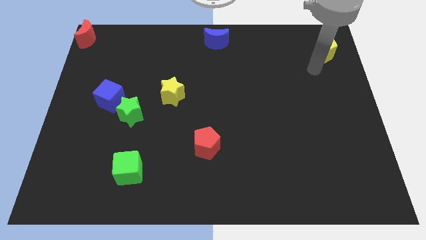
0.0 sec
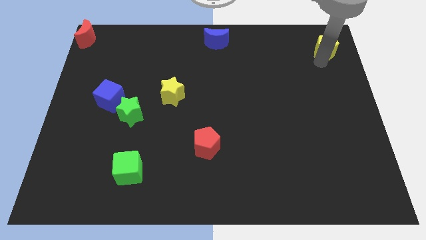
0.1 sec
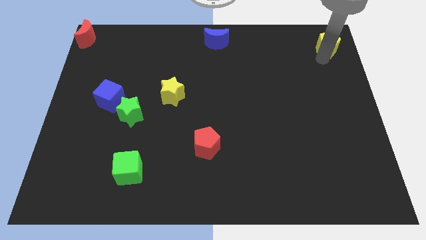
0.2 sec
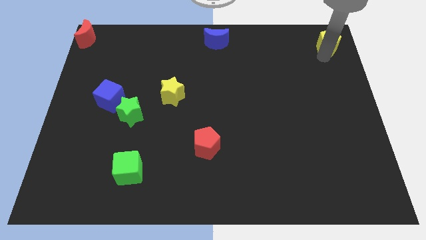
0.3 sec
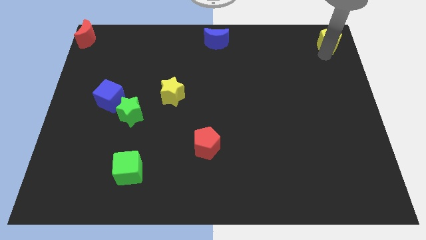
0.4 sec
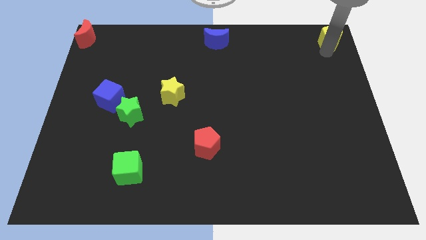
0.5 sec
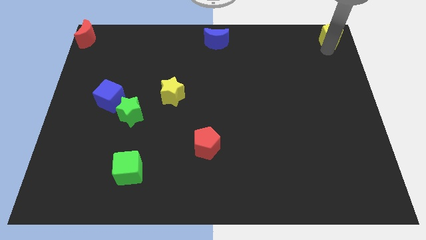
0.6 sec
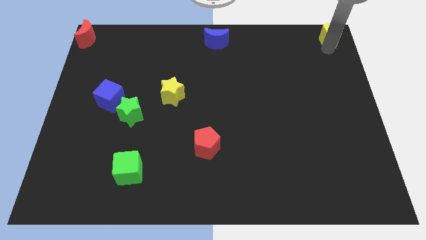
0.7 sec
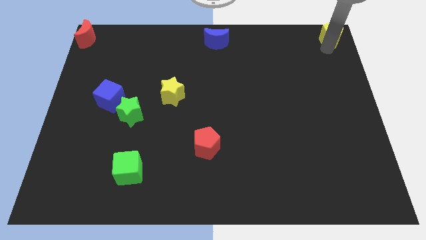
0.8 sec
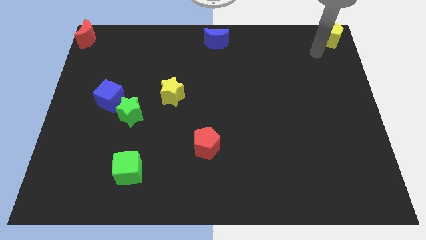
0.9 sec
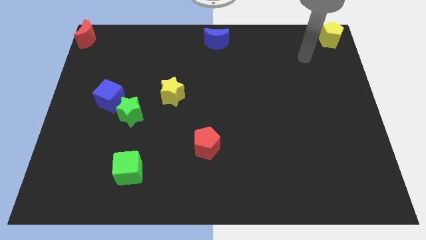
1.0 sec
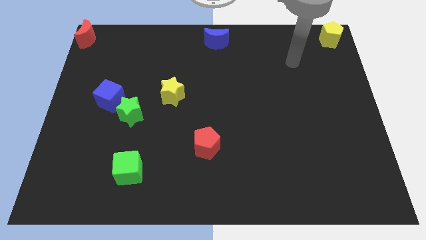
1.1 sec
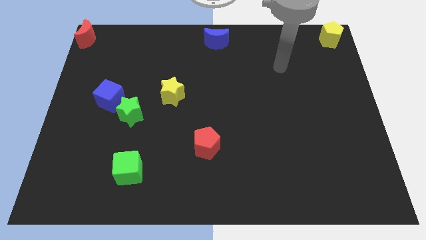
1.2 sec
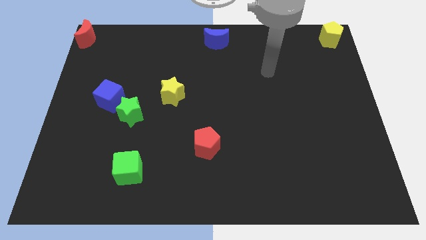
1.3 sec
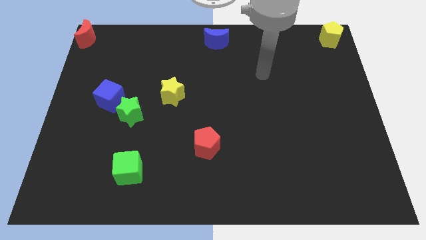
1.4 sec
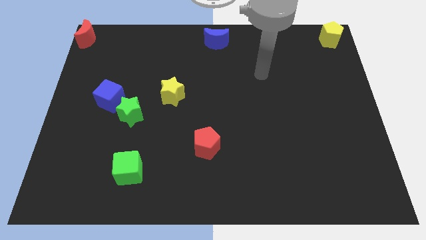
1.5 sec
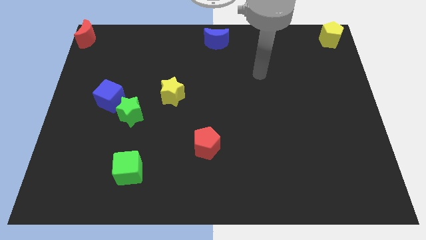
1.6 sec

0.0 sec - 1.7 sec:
push the yellow pentagon to the top right corner of the board

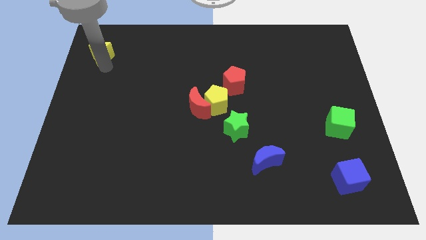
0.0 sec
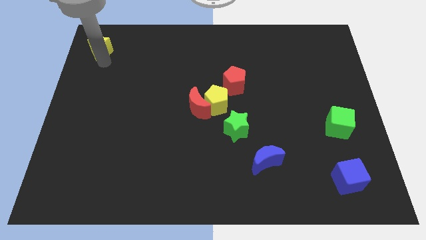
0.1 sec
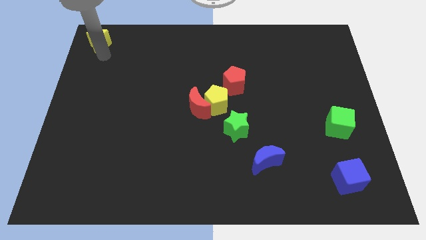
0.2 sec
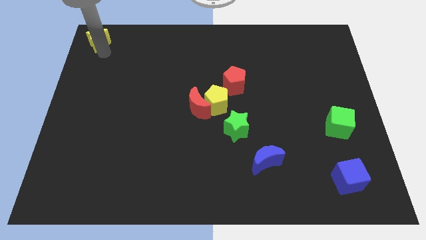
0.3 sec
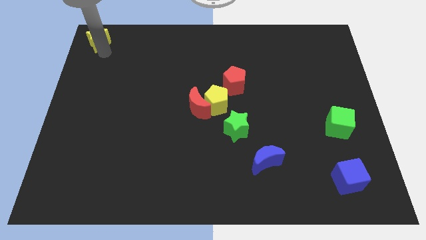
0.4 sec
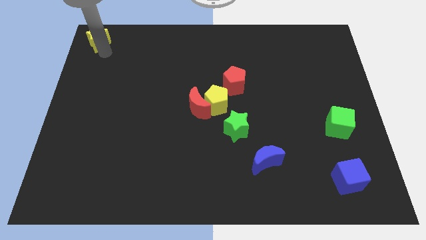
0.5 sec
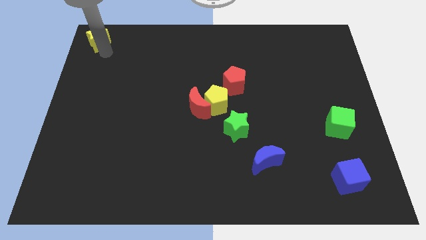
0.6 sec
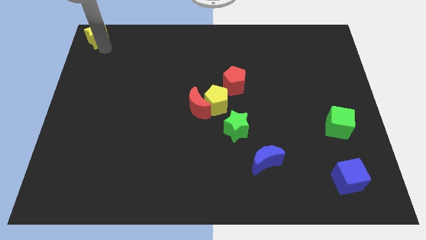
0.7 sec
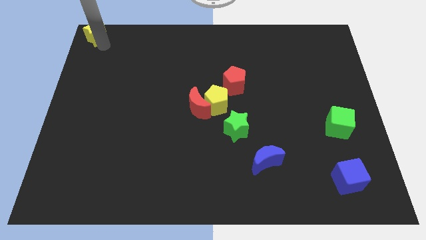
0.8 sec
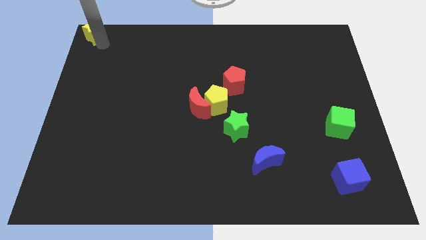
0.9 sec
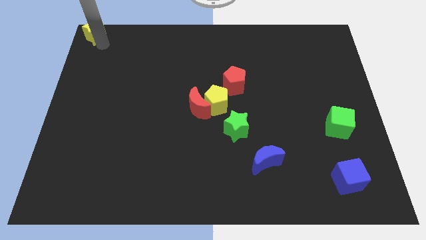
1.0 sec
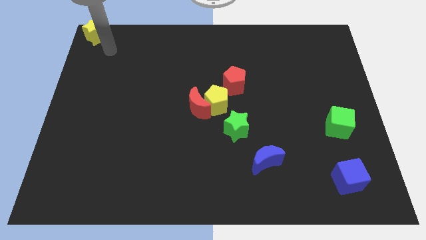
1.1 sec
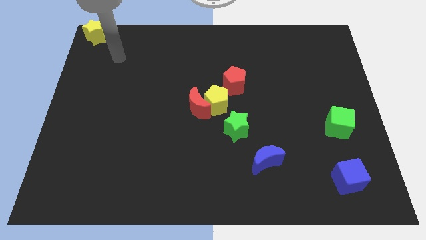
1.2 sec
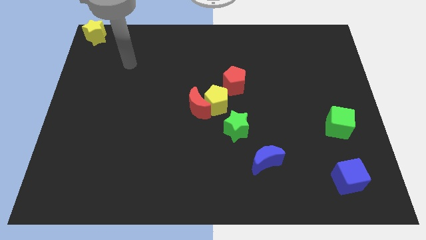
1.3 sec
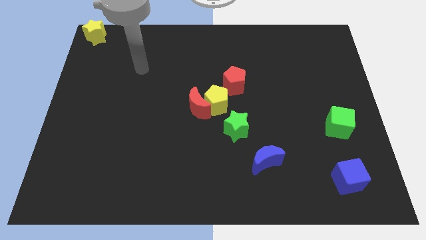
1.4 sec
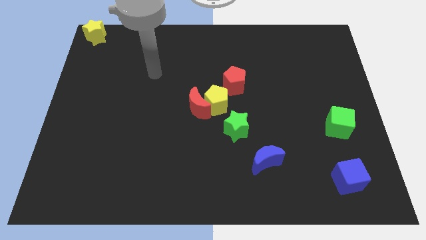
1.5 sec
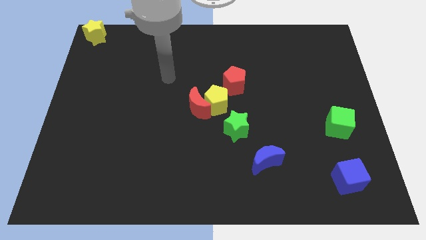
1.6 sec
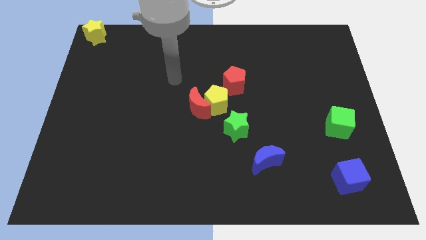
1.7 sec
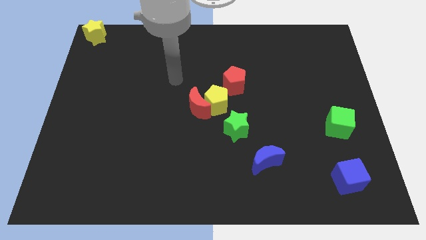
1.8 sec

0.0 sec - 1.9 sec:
place the yellow star to the top left corner of the boarrd

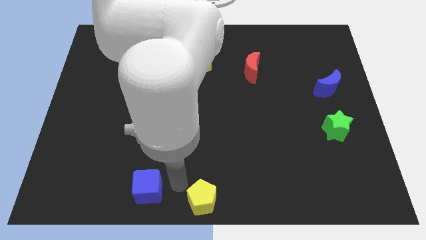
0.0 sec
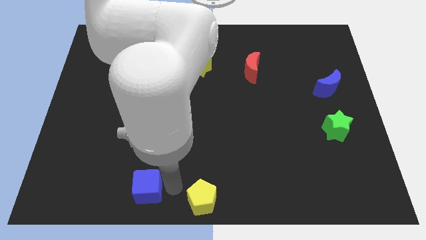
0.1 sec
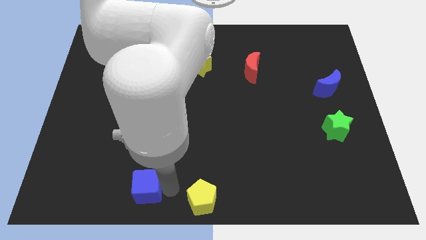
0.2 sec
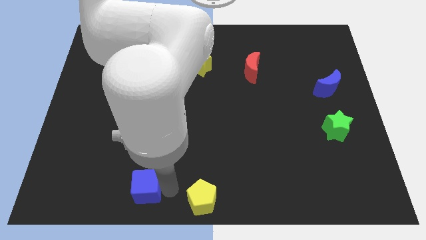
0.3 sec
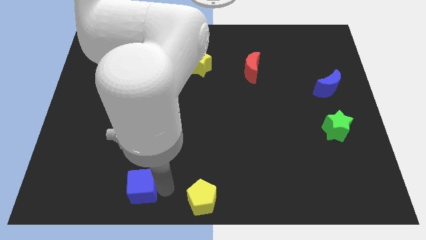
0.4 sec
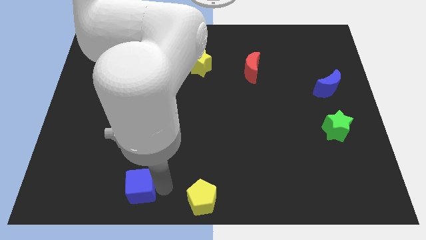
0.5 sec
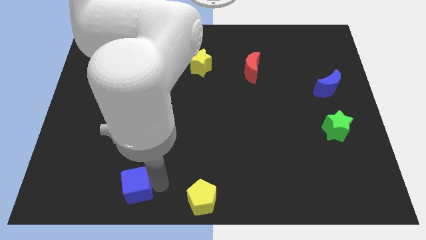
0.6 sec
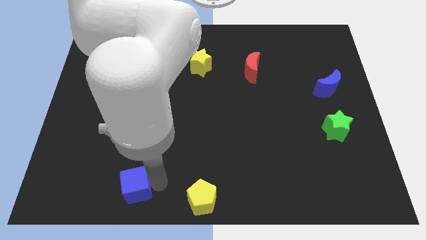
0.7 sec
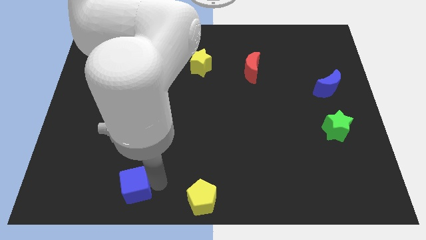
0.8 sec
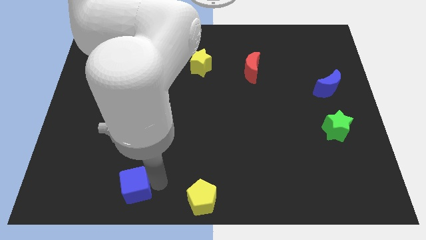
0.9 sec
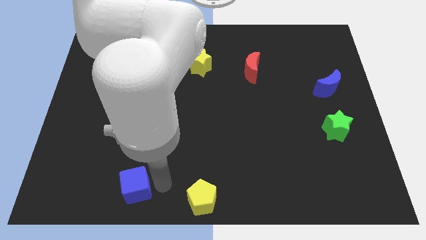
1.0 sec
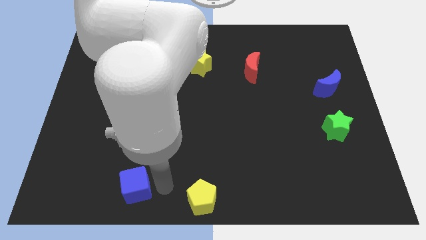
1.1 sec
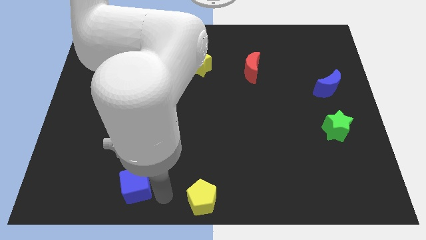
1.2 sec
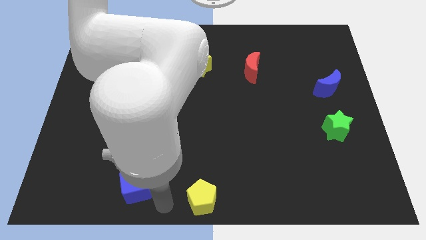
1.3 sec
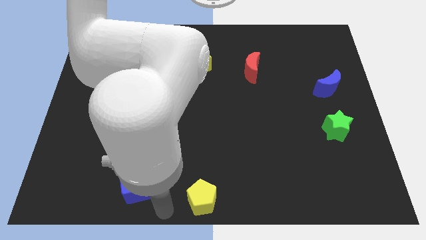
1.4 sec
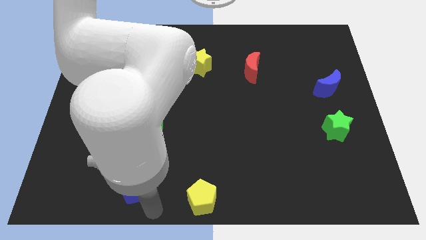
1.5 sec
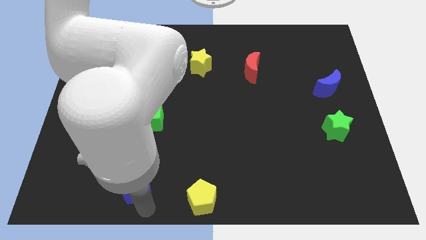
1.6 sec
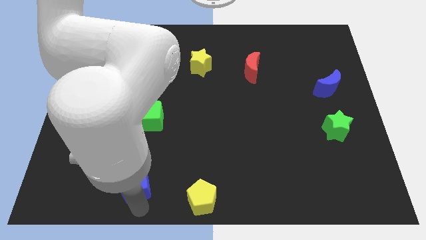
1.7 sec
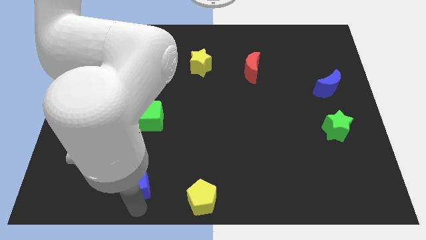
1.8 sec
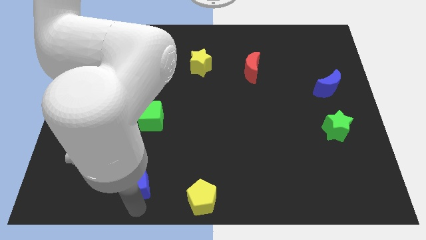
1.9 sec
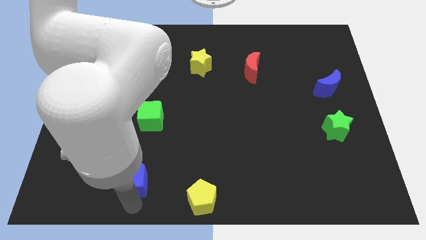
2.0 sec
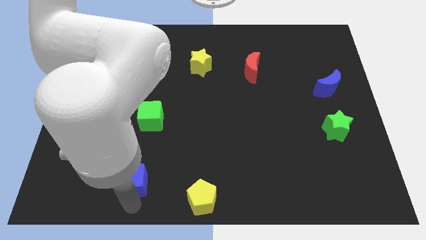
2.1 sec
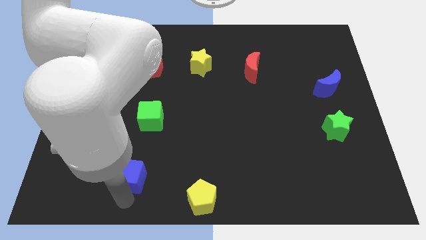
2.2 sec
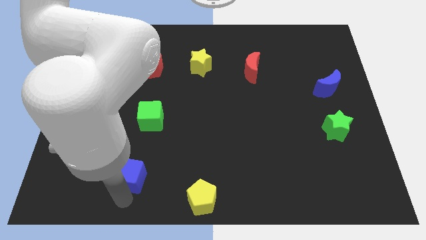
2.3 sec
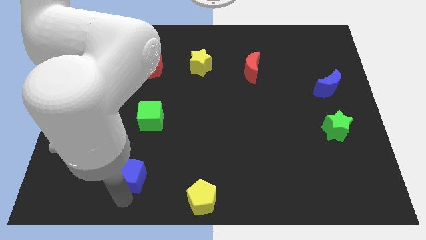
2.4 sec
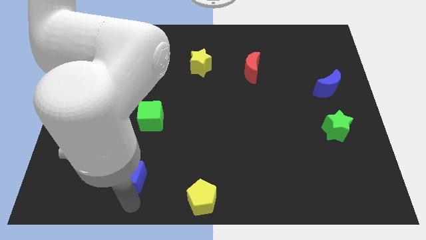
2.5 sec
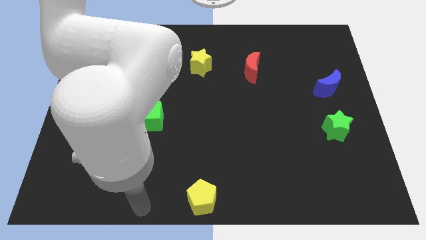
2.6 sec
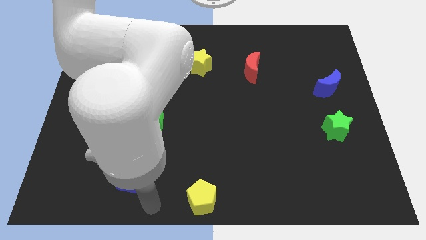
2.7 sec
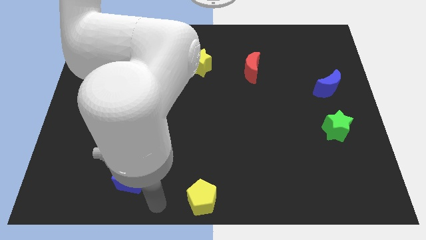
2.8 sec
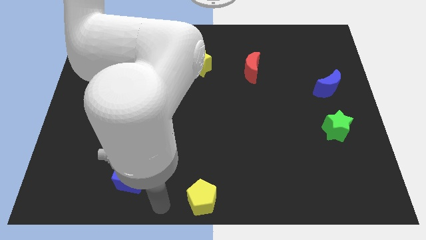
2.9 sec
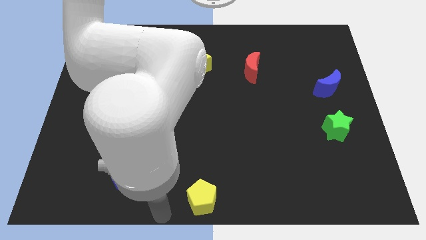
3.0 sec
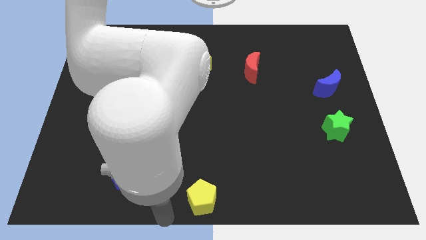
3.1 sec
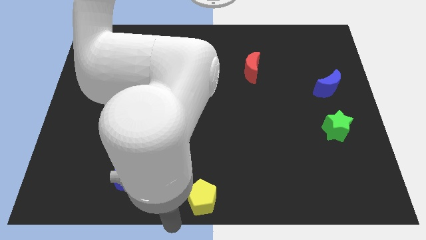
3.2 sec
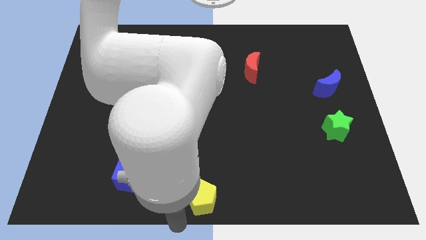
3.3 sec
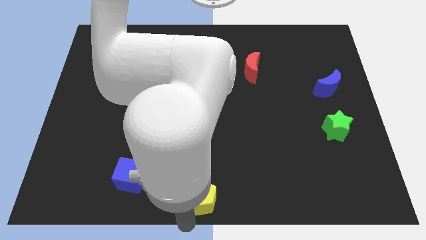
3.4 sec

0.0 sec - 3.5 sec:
move the blue cube slightly to the left

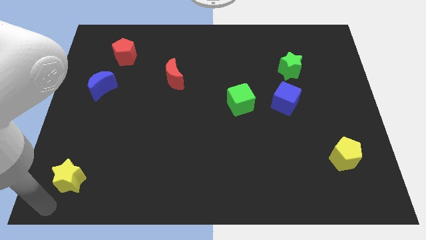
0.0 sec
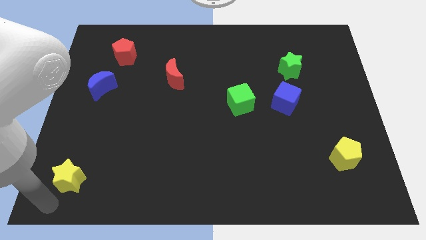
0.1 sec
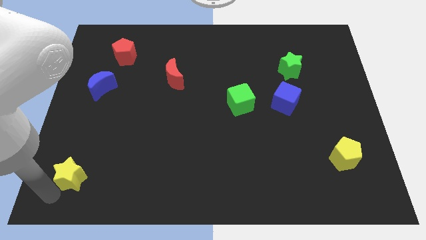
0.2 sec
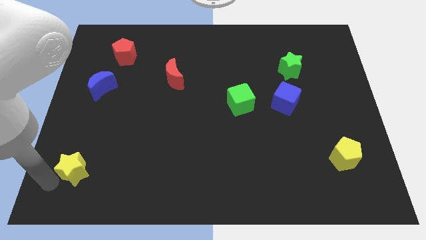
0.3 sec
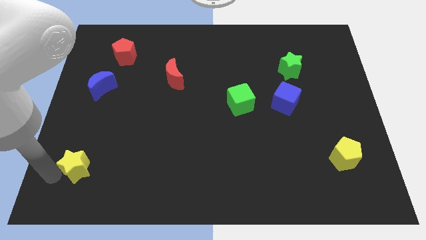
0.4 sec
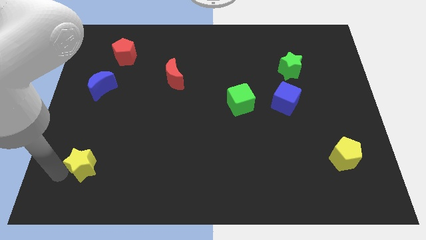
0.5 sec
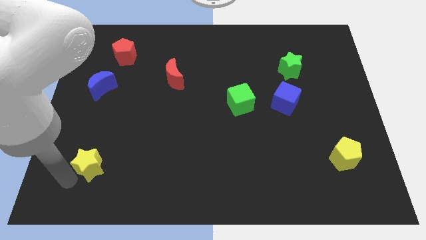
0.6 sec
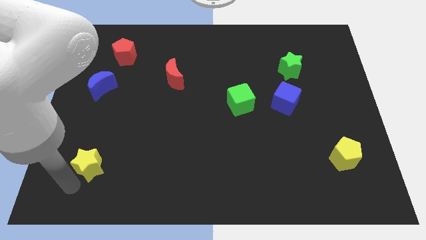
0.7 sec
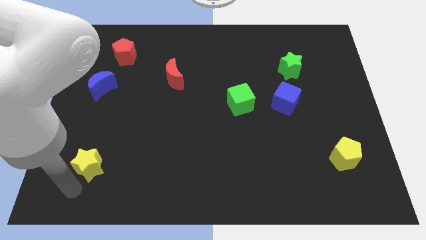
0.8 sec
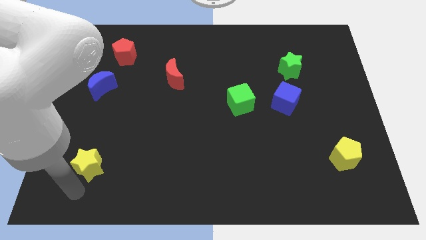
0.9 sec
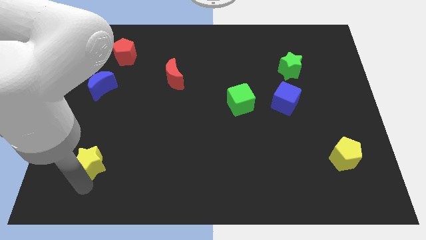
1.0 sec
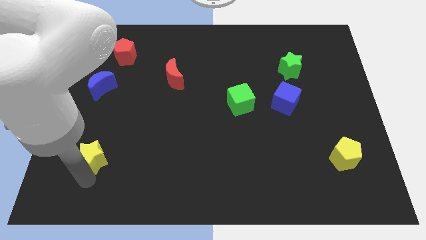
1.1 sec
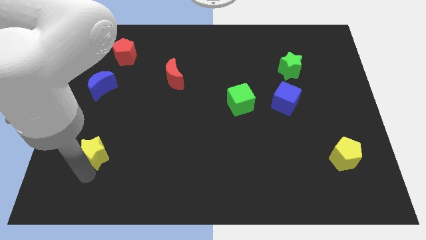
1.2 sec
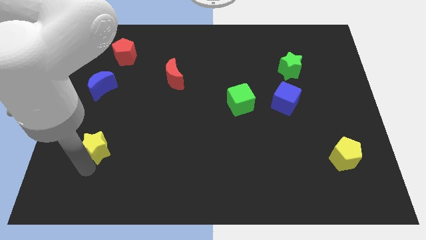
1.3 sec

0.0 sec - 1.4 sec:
place the yellow star below the blue moon

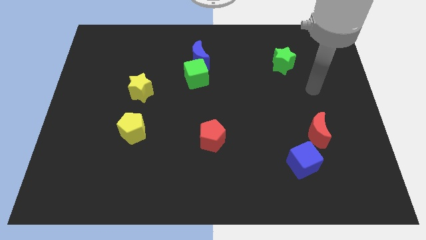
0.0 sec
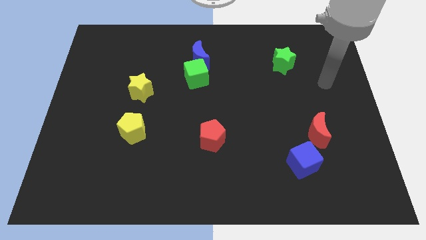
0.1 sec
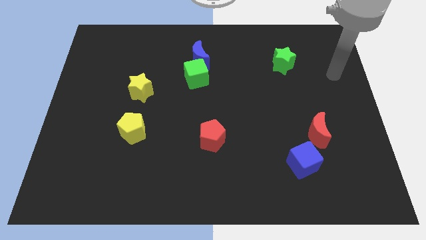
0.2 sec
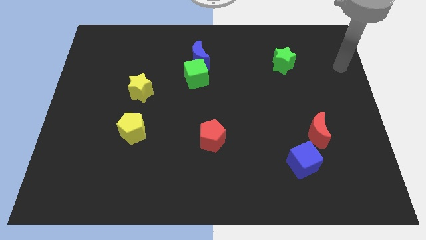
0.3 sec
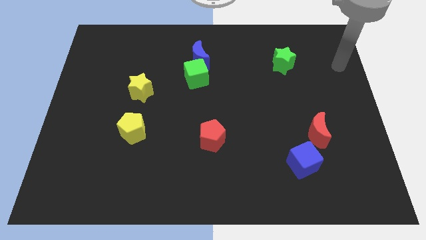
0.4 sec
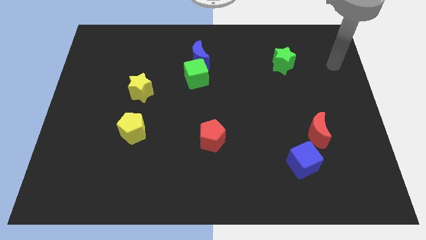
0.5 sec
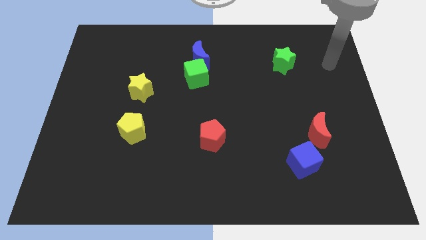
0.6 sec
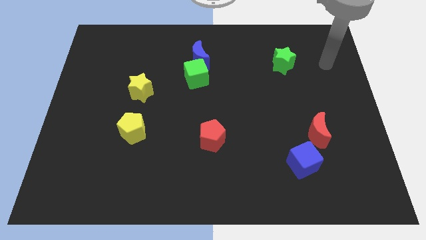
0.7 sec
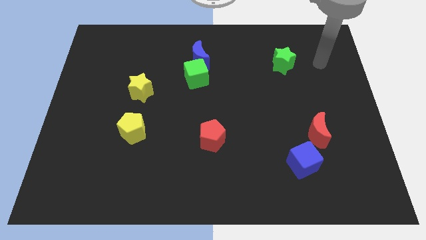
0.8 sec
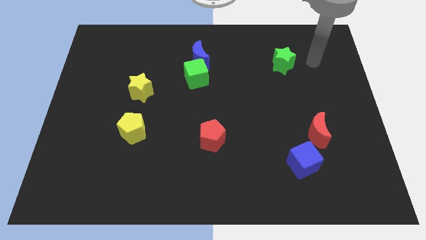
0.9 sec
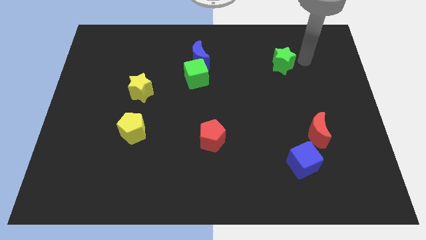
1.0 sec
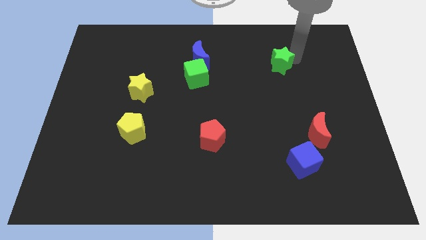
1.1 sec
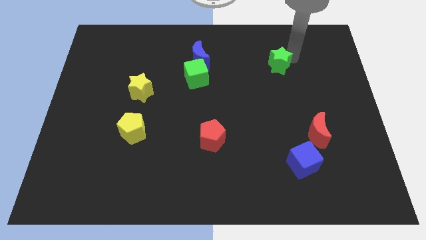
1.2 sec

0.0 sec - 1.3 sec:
tap green star on its right
